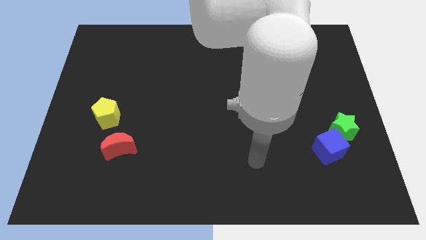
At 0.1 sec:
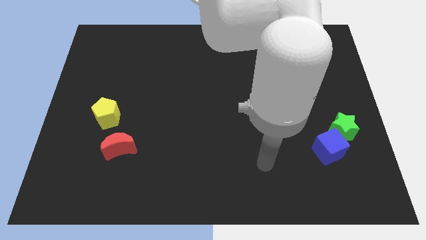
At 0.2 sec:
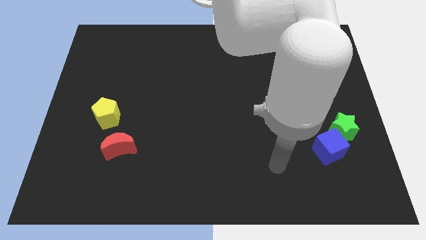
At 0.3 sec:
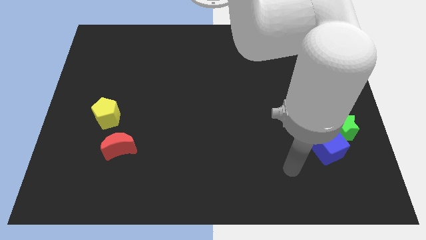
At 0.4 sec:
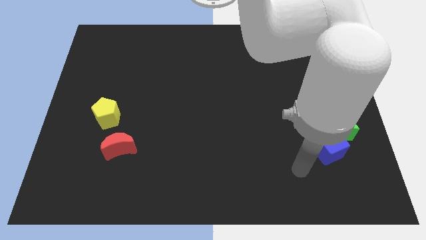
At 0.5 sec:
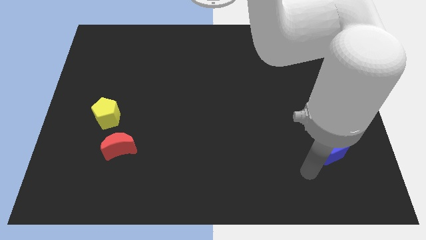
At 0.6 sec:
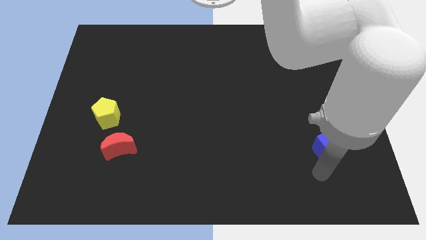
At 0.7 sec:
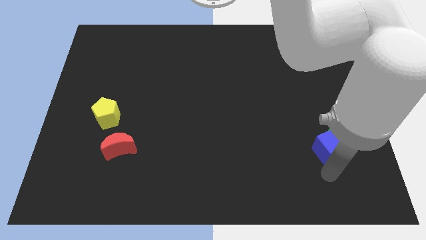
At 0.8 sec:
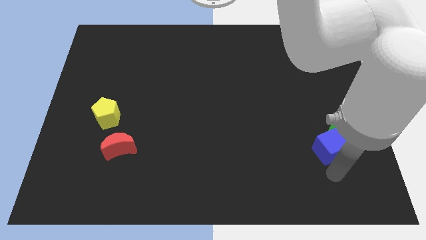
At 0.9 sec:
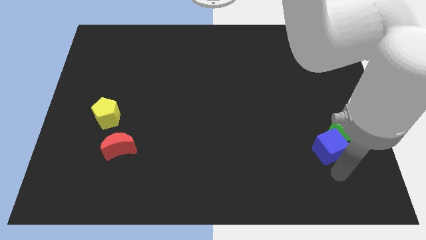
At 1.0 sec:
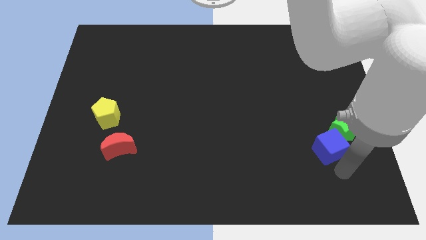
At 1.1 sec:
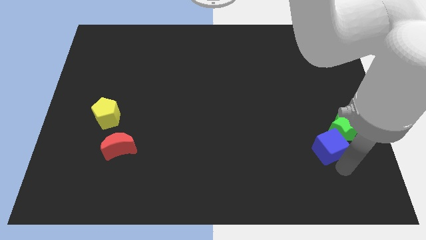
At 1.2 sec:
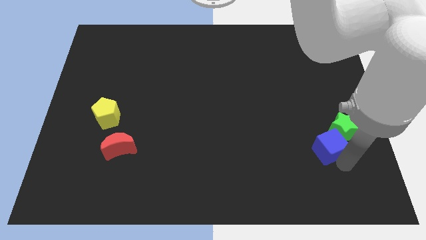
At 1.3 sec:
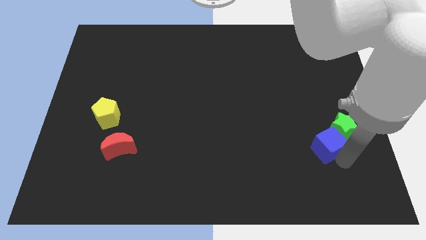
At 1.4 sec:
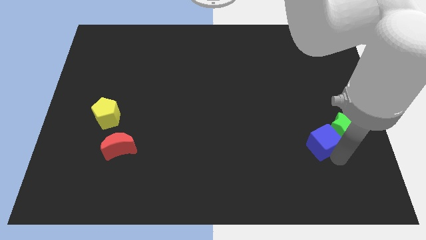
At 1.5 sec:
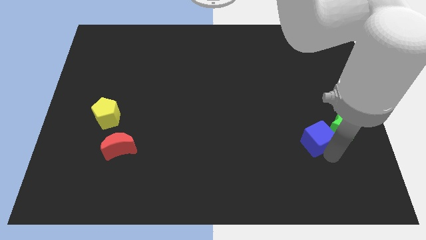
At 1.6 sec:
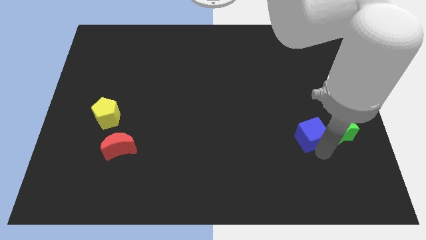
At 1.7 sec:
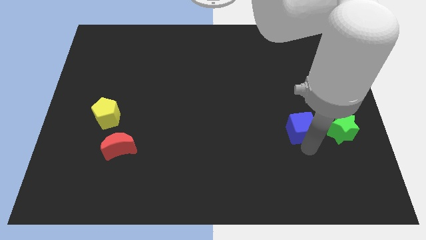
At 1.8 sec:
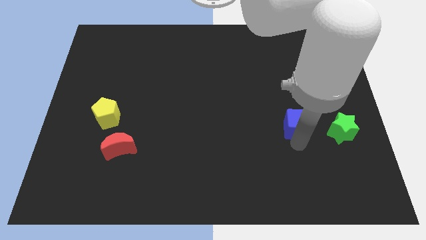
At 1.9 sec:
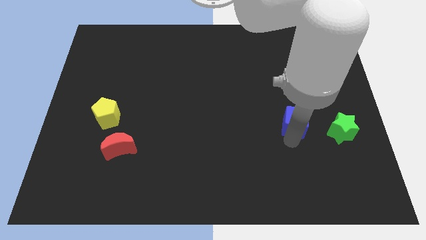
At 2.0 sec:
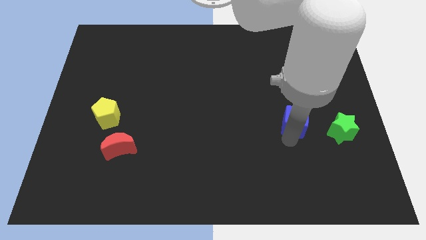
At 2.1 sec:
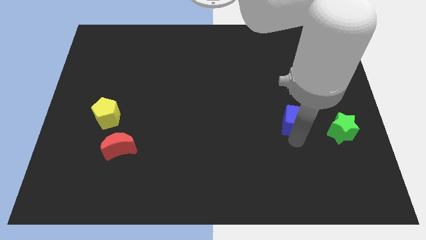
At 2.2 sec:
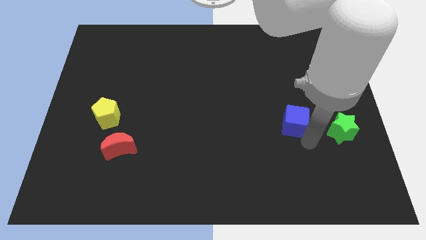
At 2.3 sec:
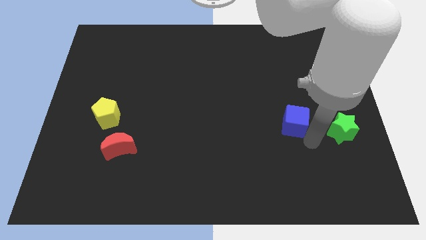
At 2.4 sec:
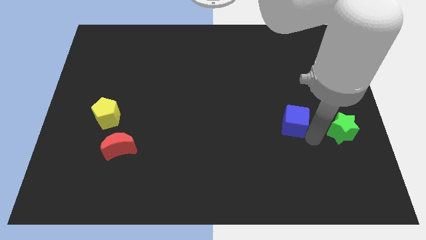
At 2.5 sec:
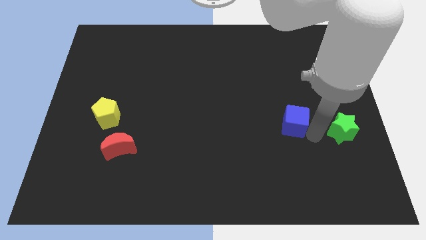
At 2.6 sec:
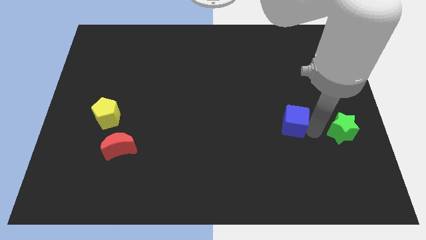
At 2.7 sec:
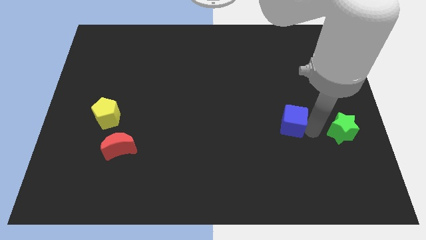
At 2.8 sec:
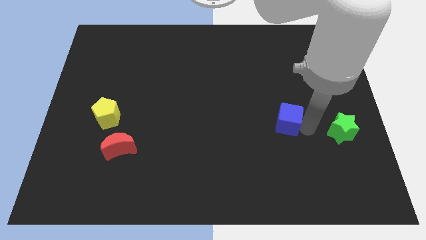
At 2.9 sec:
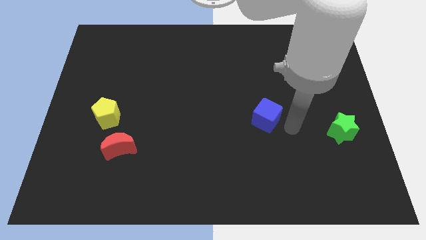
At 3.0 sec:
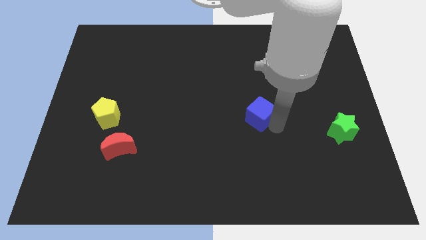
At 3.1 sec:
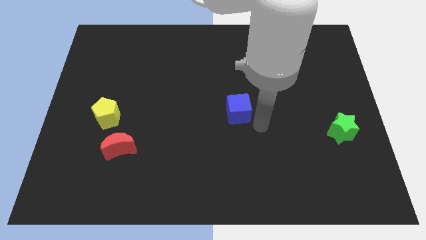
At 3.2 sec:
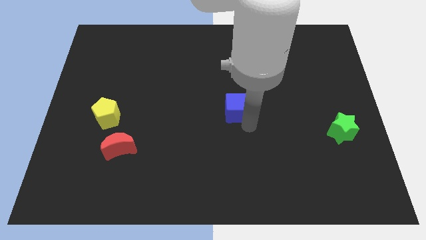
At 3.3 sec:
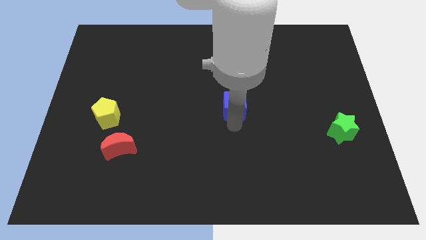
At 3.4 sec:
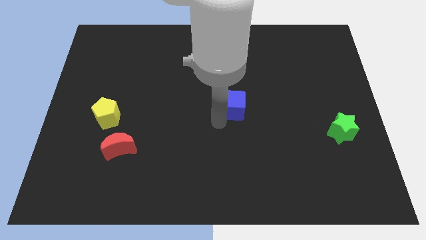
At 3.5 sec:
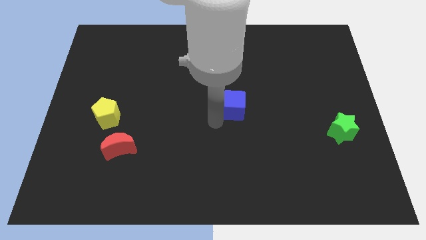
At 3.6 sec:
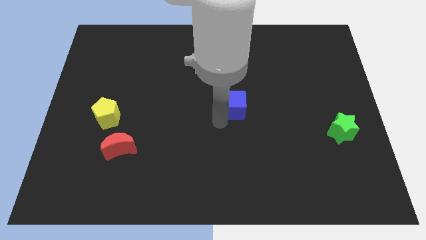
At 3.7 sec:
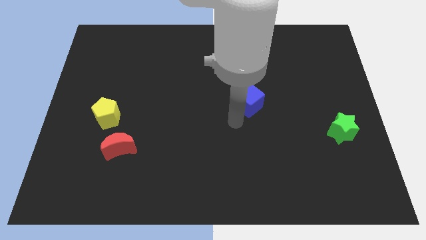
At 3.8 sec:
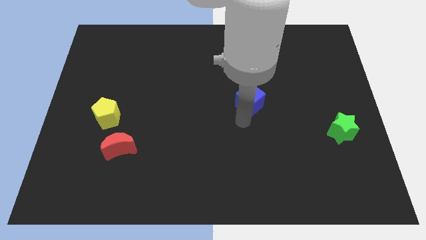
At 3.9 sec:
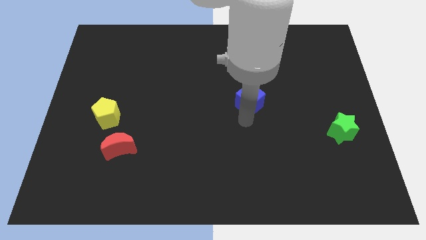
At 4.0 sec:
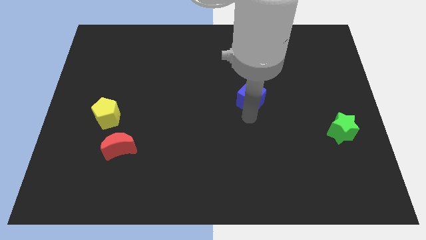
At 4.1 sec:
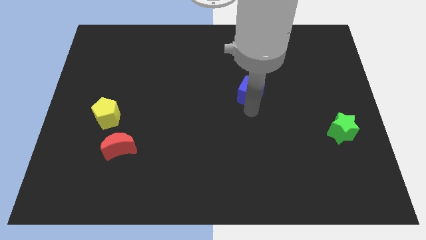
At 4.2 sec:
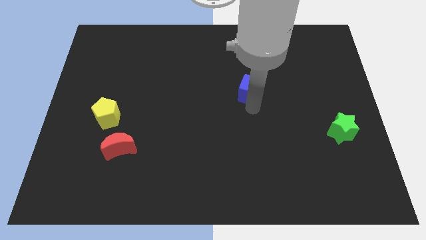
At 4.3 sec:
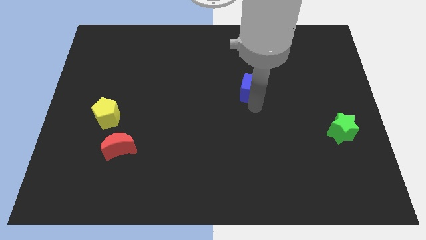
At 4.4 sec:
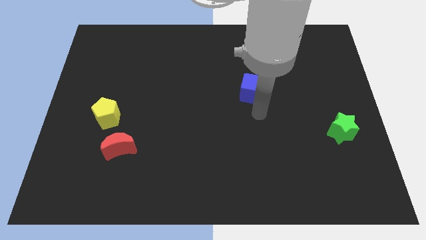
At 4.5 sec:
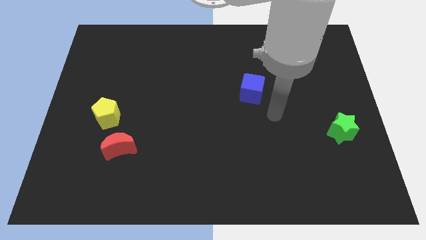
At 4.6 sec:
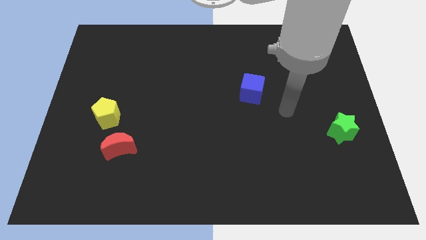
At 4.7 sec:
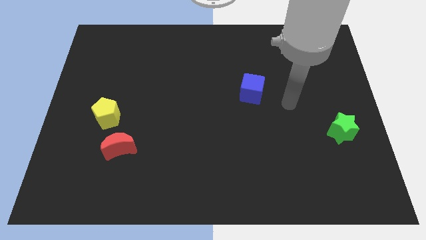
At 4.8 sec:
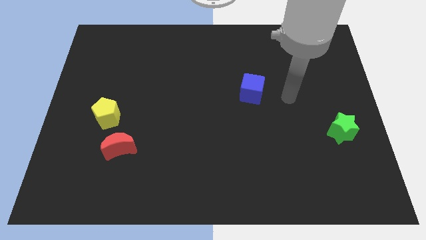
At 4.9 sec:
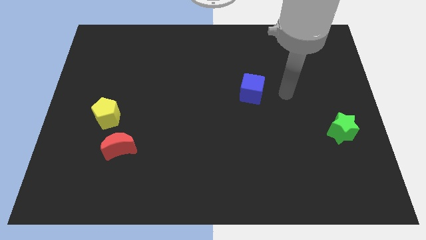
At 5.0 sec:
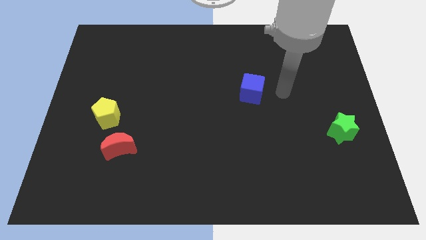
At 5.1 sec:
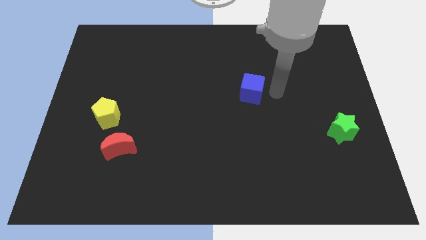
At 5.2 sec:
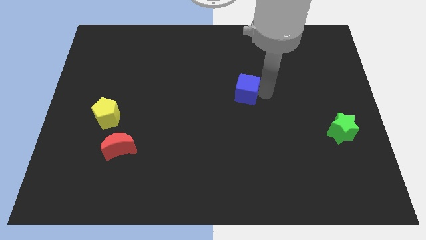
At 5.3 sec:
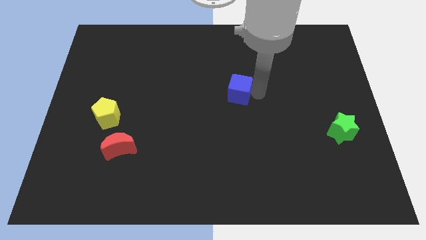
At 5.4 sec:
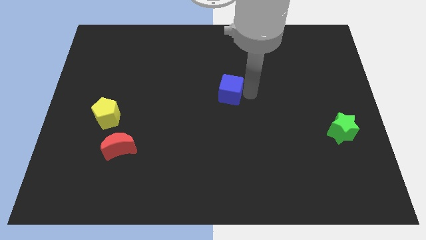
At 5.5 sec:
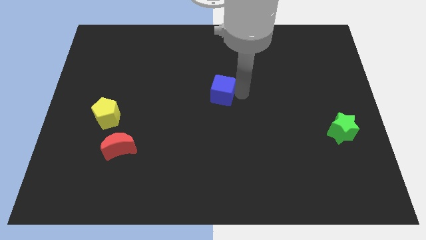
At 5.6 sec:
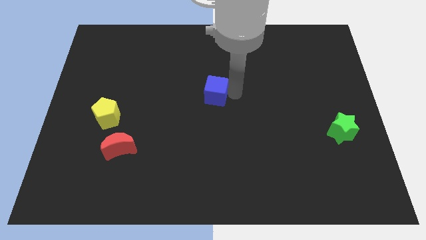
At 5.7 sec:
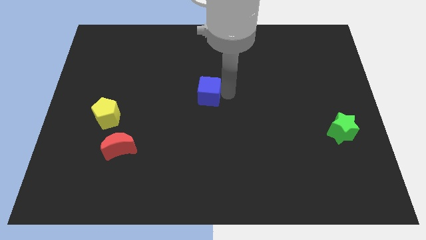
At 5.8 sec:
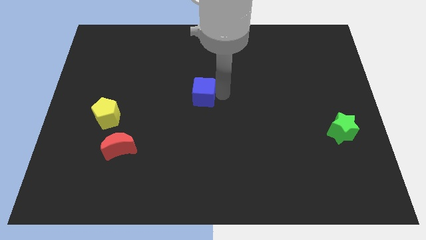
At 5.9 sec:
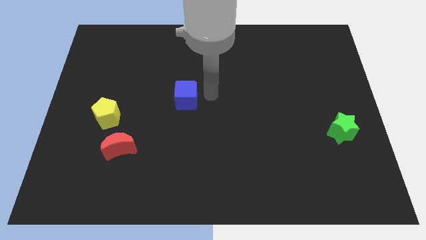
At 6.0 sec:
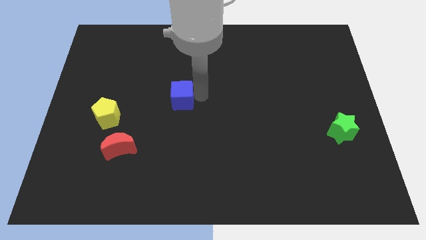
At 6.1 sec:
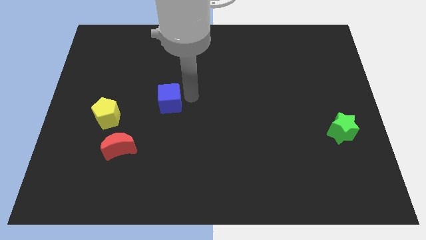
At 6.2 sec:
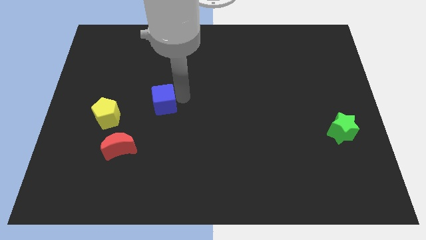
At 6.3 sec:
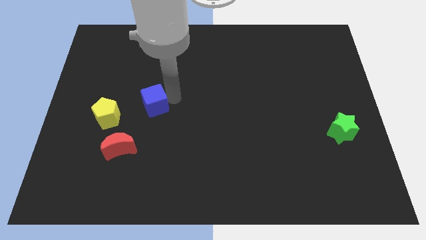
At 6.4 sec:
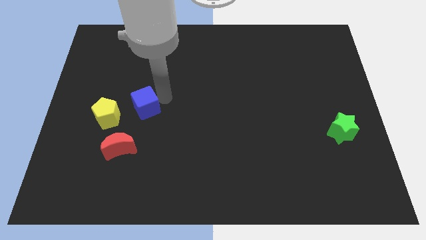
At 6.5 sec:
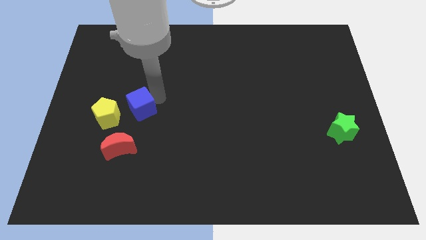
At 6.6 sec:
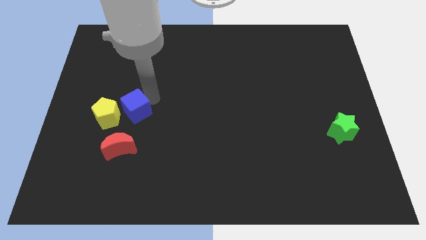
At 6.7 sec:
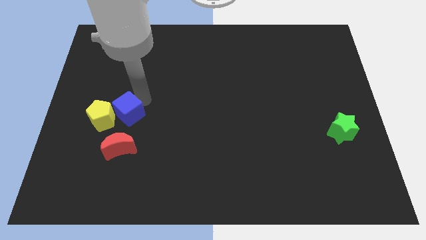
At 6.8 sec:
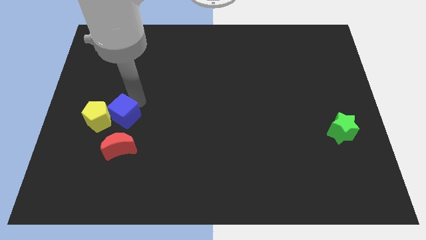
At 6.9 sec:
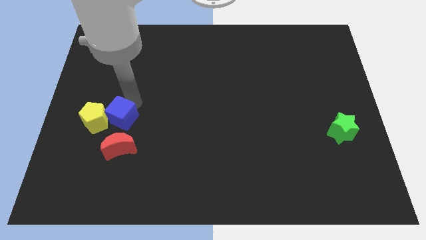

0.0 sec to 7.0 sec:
slide the cube to the yellow block

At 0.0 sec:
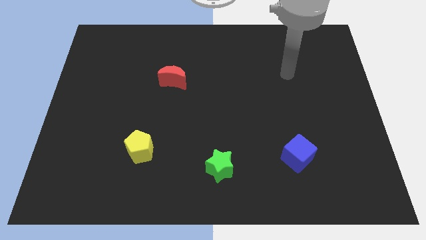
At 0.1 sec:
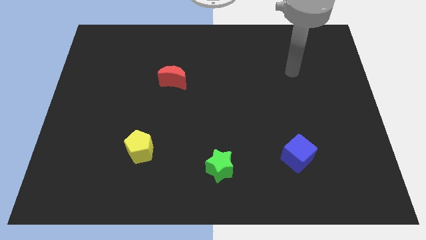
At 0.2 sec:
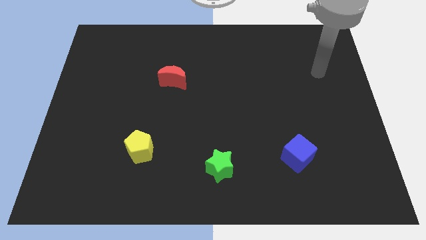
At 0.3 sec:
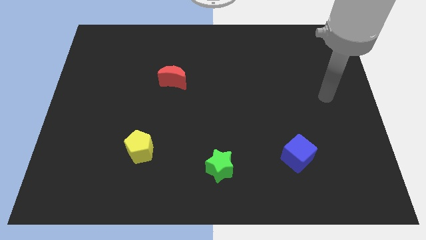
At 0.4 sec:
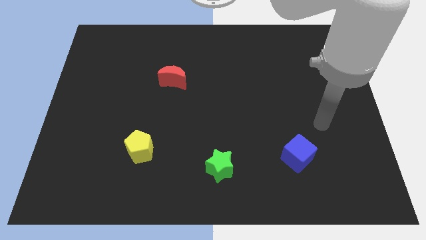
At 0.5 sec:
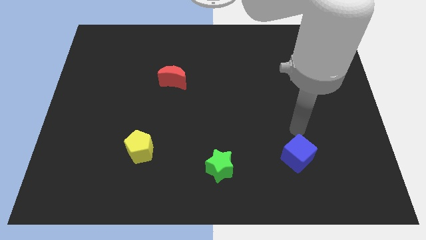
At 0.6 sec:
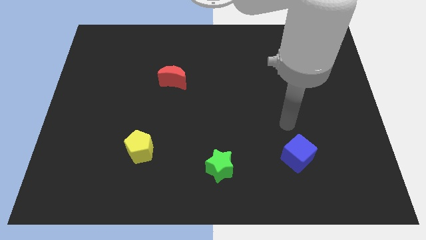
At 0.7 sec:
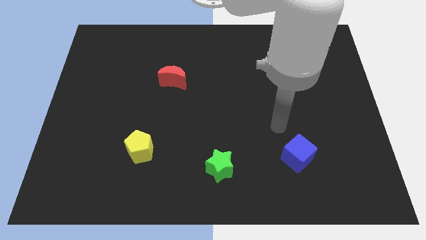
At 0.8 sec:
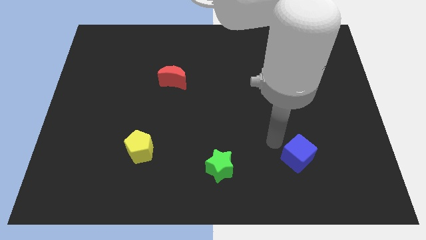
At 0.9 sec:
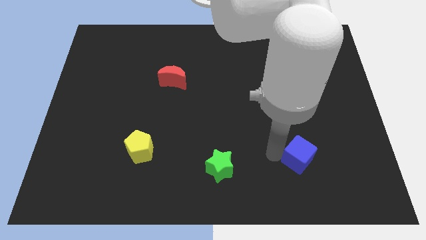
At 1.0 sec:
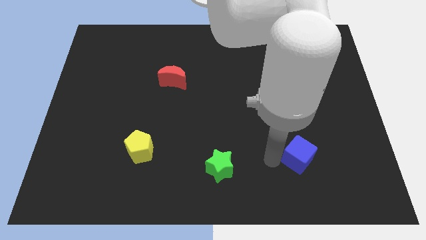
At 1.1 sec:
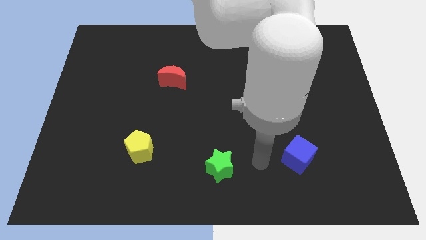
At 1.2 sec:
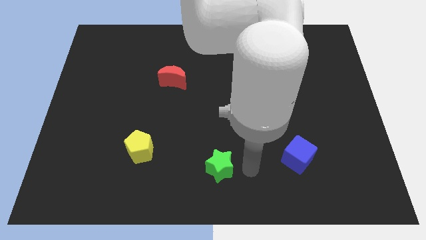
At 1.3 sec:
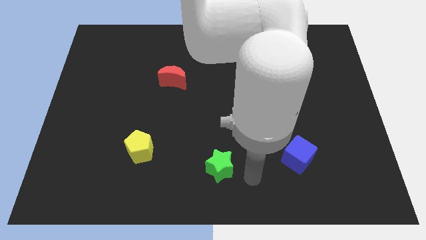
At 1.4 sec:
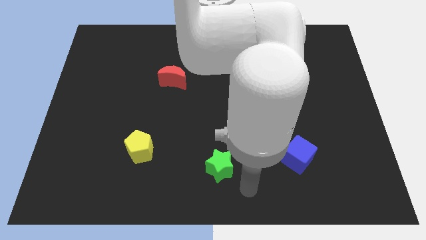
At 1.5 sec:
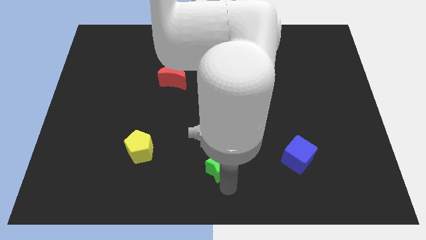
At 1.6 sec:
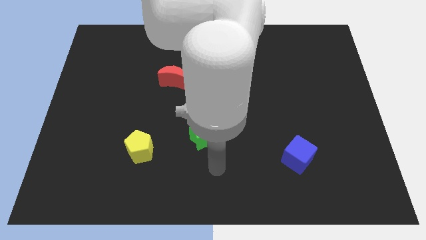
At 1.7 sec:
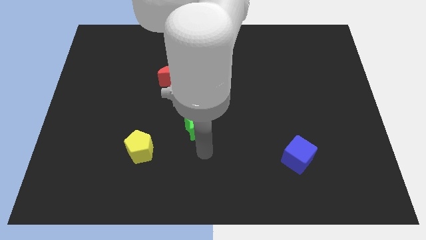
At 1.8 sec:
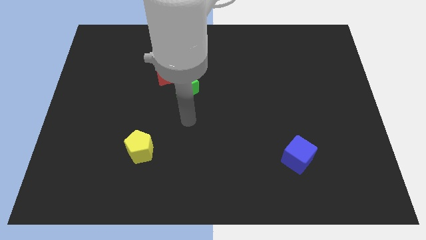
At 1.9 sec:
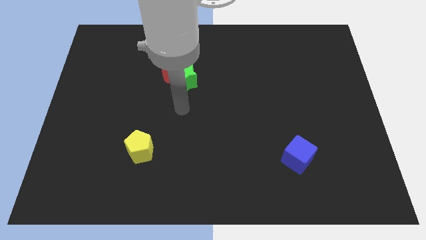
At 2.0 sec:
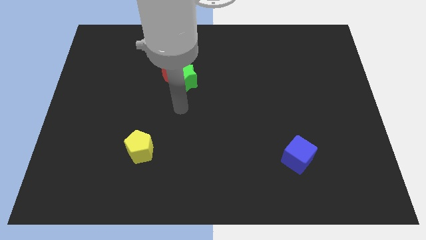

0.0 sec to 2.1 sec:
slide the green block close to the red moon
